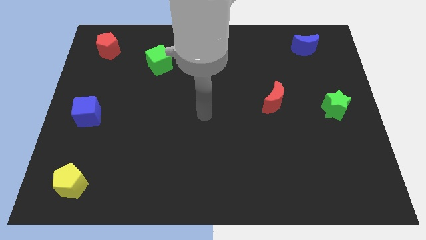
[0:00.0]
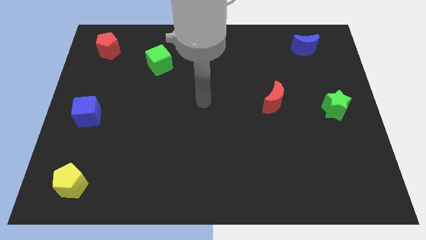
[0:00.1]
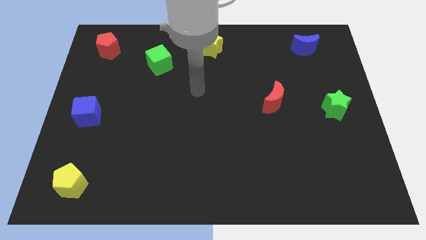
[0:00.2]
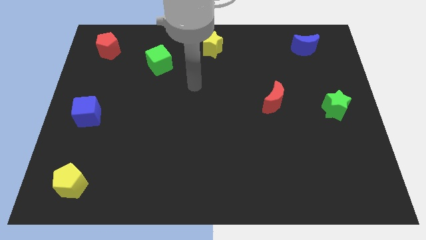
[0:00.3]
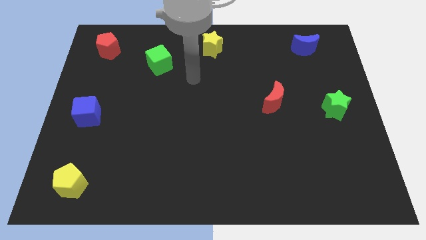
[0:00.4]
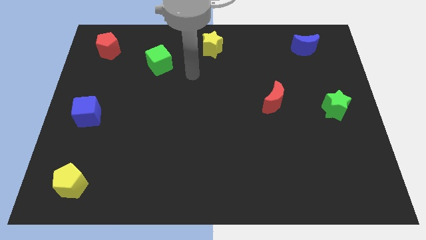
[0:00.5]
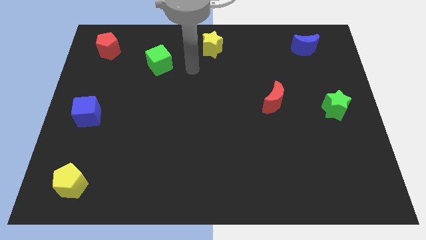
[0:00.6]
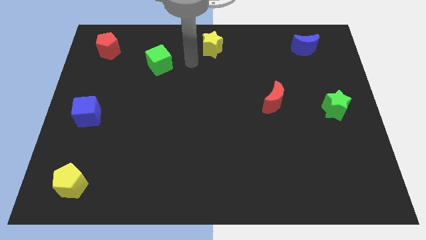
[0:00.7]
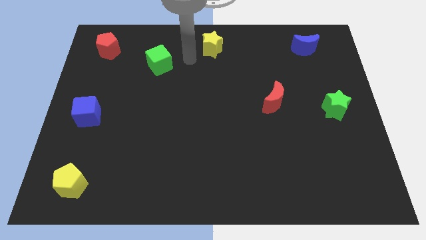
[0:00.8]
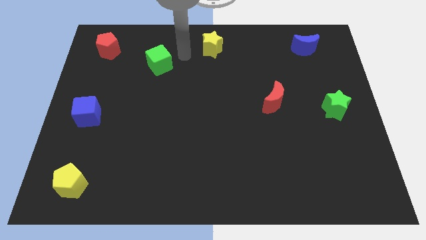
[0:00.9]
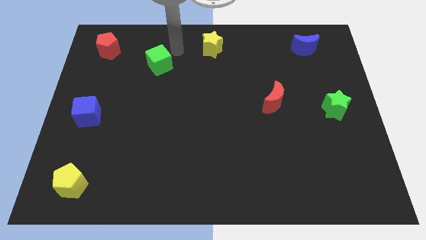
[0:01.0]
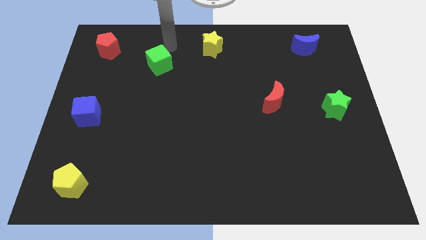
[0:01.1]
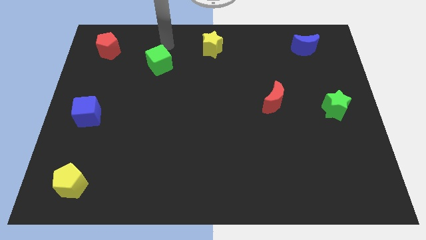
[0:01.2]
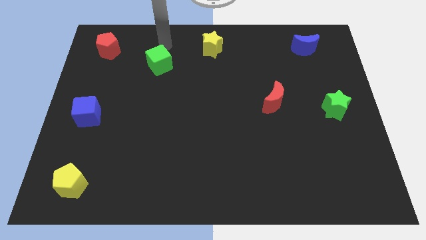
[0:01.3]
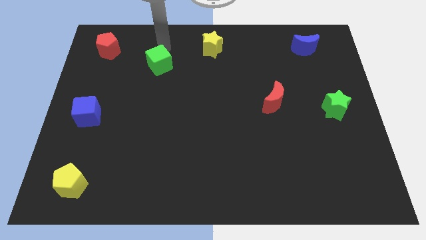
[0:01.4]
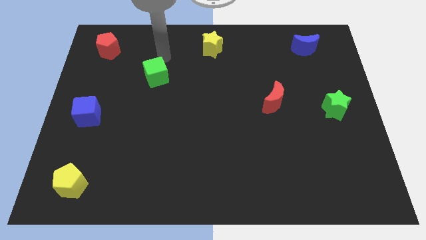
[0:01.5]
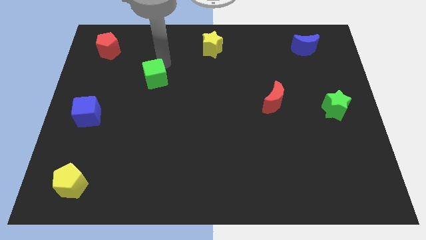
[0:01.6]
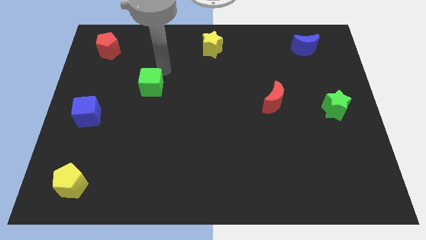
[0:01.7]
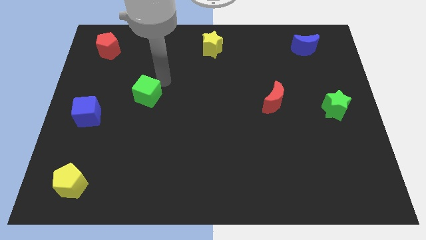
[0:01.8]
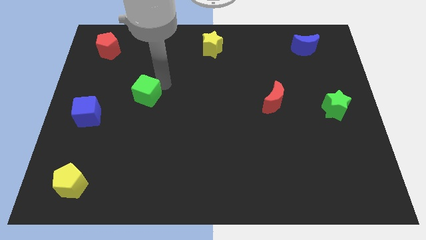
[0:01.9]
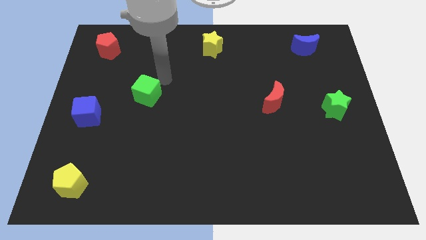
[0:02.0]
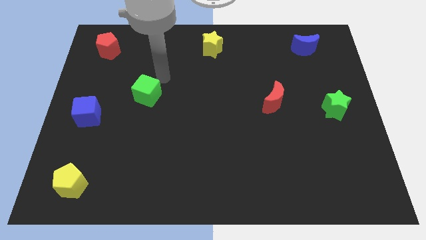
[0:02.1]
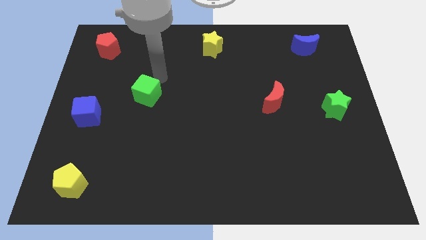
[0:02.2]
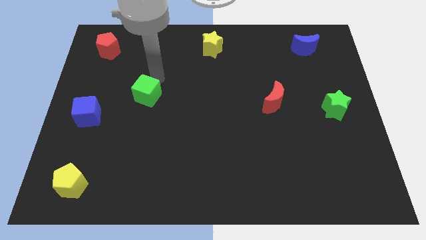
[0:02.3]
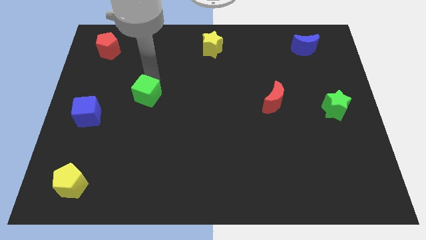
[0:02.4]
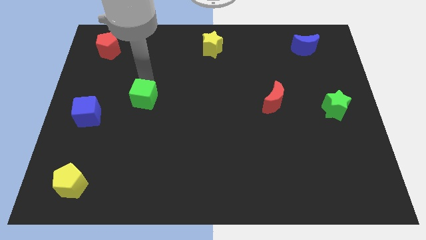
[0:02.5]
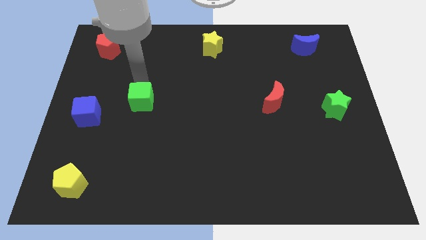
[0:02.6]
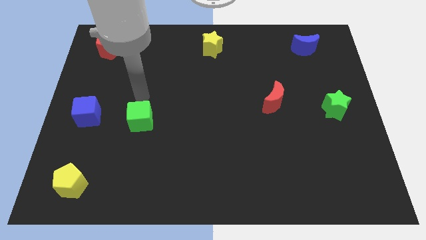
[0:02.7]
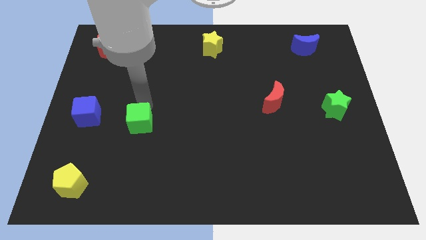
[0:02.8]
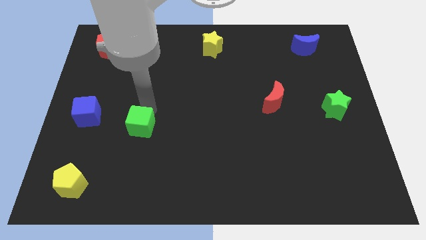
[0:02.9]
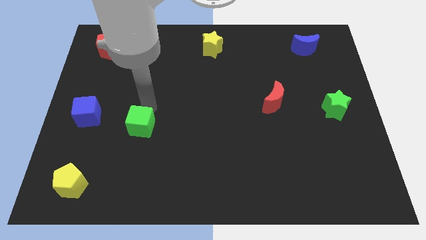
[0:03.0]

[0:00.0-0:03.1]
slide green cube to the right of blue cube

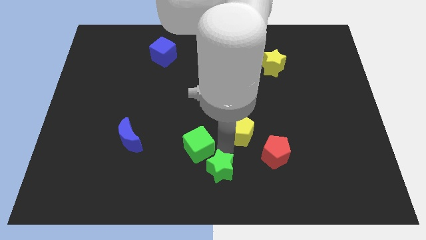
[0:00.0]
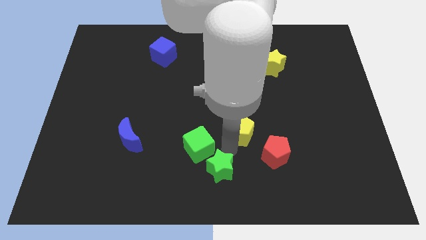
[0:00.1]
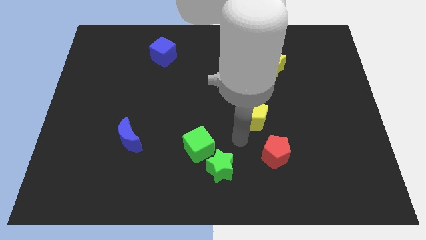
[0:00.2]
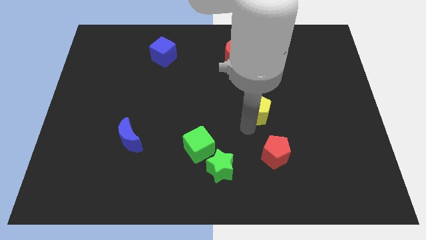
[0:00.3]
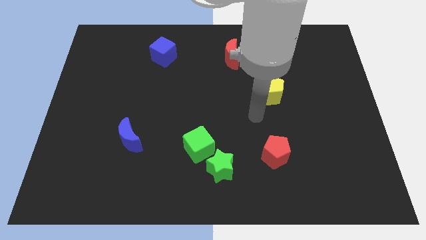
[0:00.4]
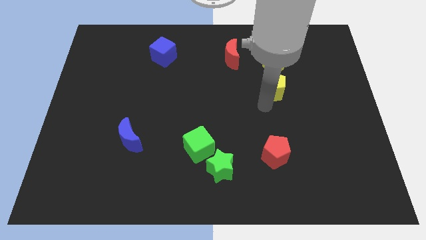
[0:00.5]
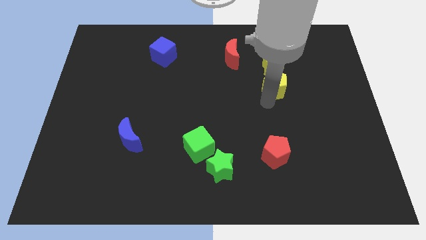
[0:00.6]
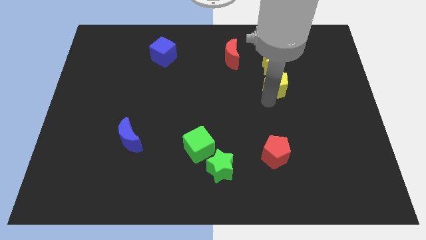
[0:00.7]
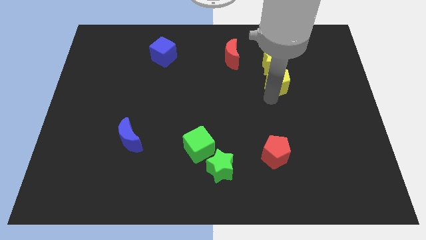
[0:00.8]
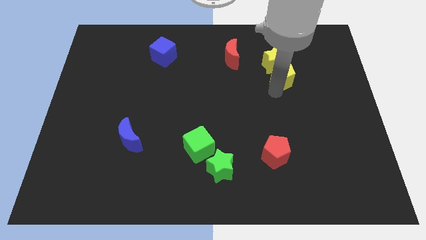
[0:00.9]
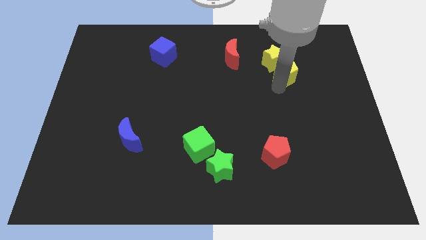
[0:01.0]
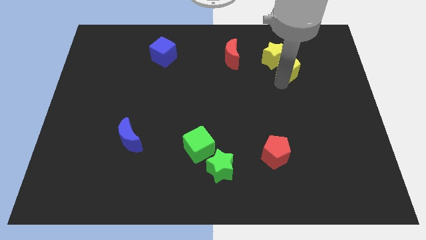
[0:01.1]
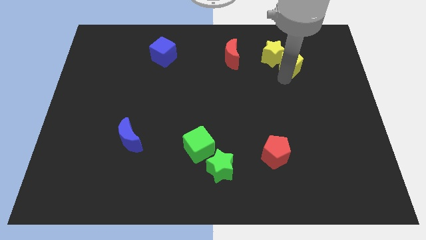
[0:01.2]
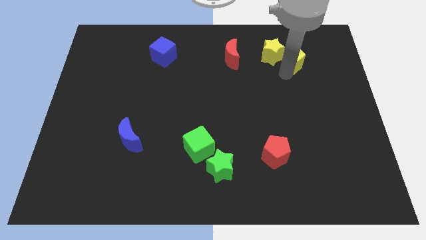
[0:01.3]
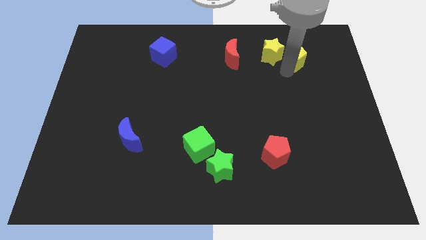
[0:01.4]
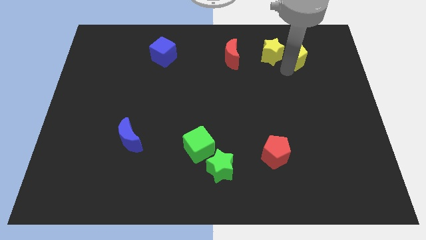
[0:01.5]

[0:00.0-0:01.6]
push the yellow pentagon into yellow star

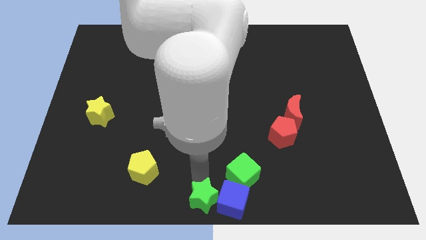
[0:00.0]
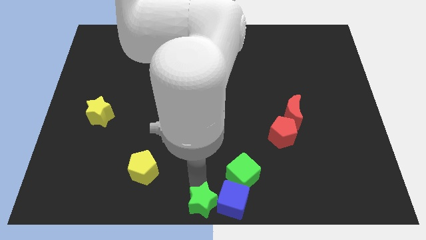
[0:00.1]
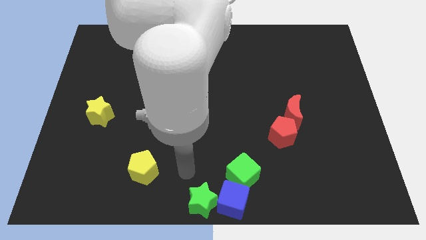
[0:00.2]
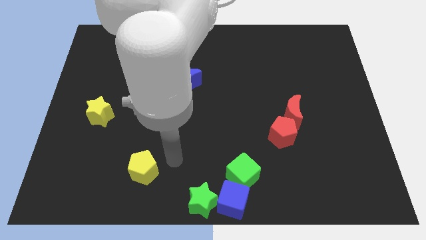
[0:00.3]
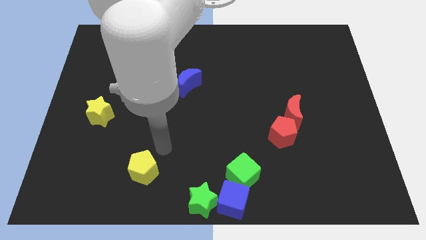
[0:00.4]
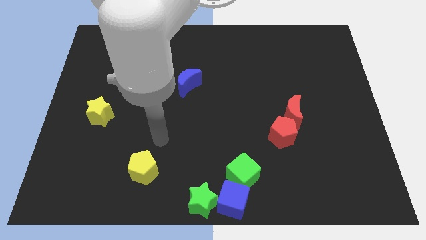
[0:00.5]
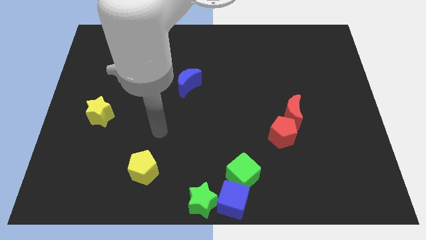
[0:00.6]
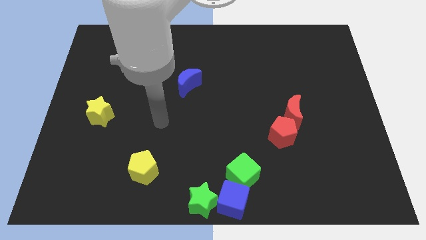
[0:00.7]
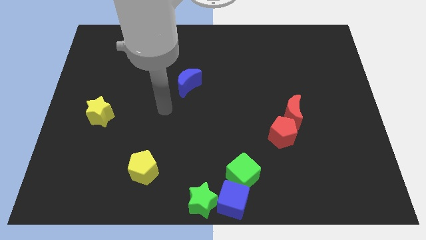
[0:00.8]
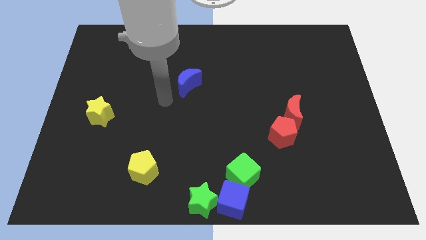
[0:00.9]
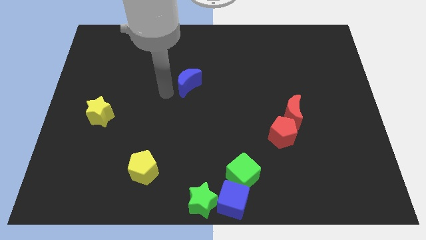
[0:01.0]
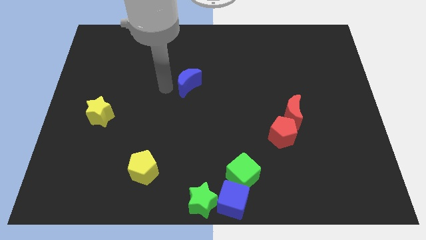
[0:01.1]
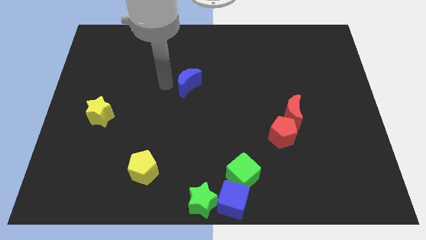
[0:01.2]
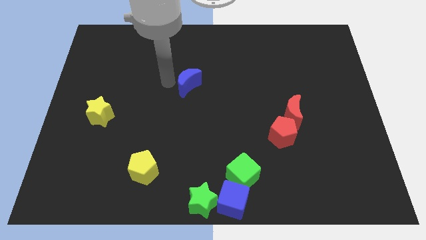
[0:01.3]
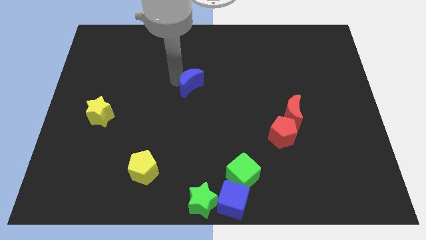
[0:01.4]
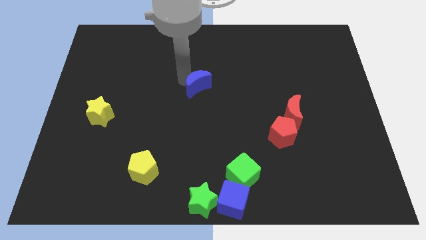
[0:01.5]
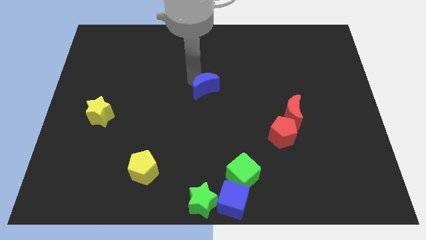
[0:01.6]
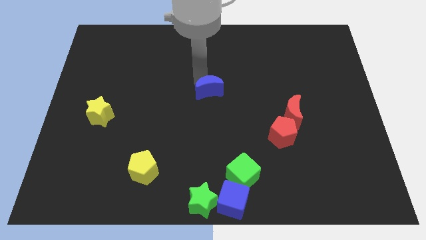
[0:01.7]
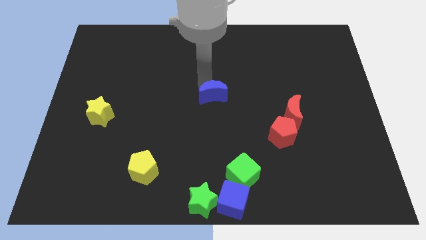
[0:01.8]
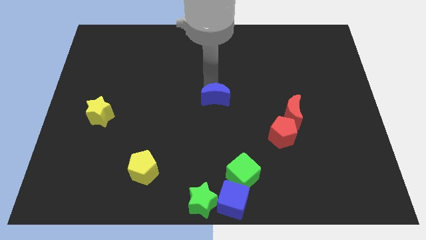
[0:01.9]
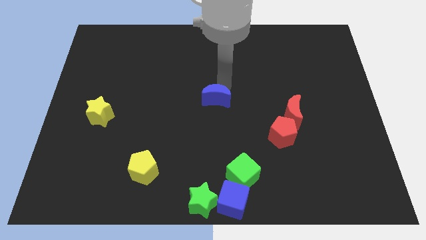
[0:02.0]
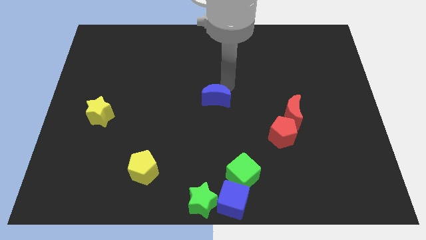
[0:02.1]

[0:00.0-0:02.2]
move your arm to the top of blue moon

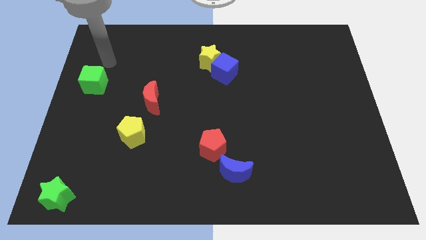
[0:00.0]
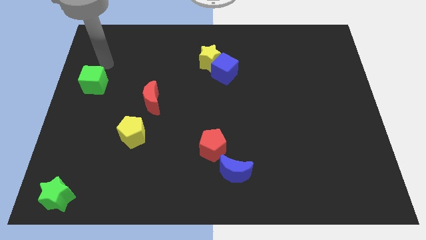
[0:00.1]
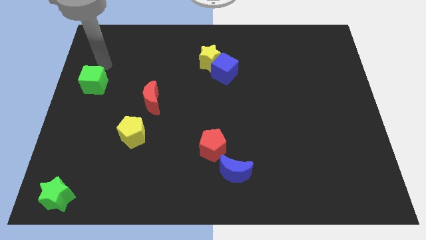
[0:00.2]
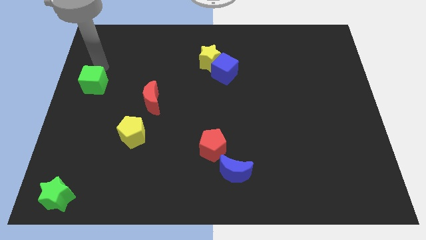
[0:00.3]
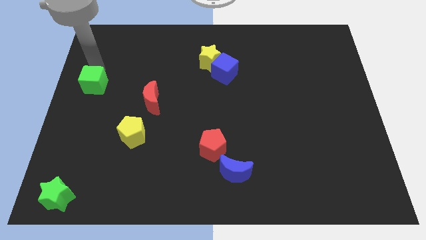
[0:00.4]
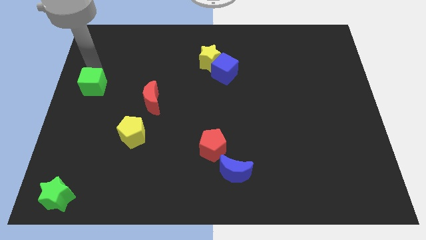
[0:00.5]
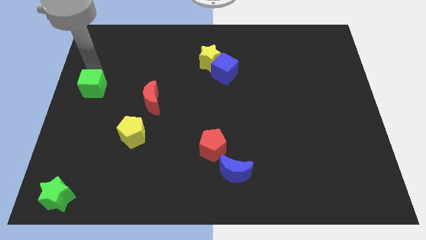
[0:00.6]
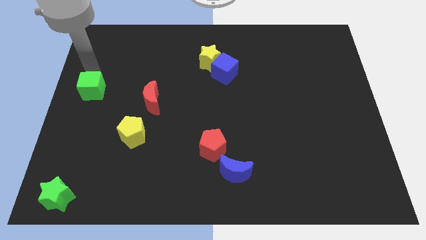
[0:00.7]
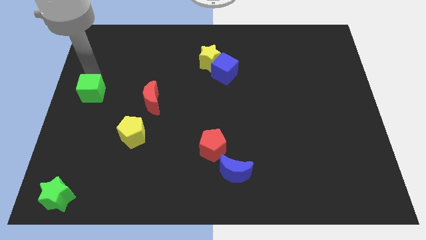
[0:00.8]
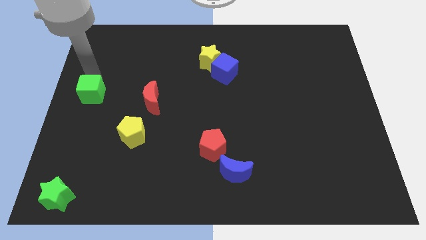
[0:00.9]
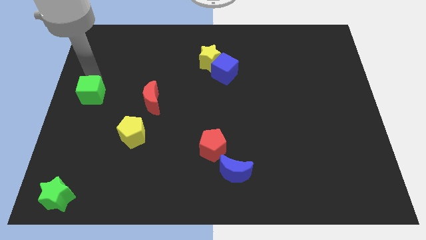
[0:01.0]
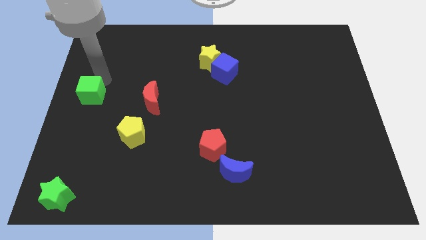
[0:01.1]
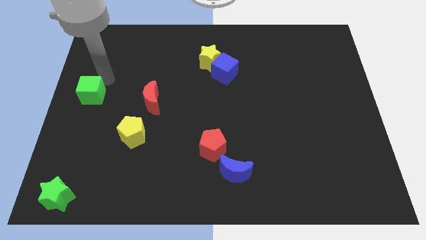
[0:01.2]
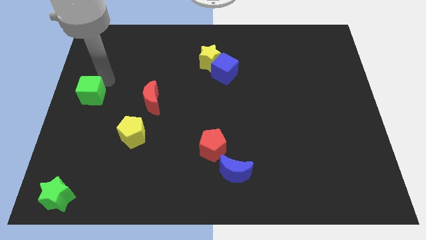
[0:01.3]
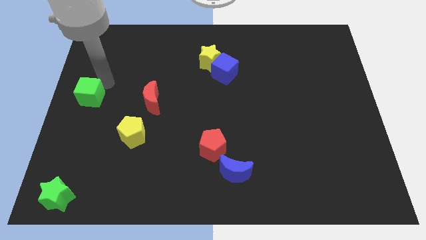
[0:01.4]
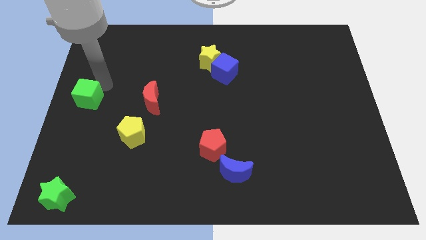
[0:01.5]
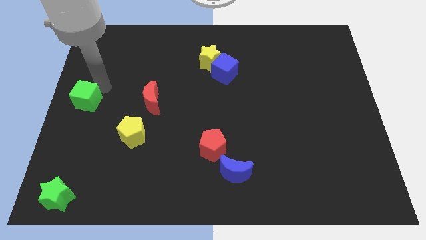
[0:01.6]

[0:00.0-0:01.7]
place the green cube horizontally to the left side of the red crescent

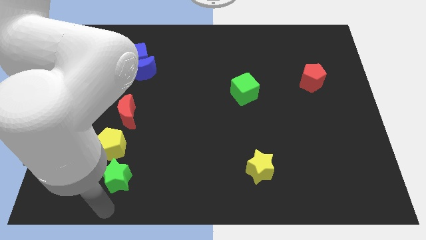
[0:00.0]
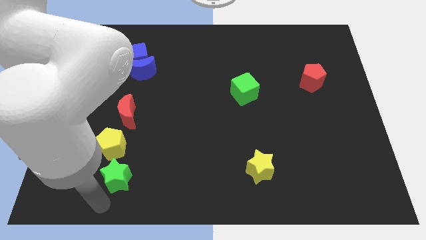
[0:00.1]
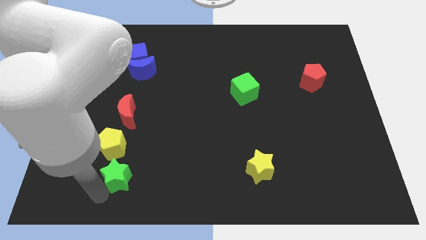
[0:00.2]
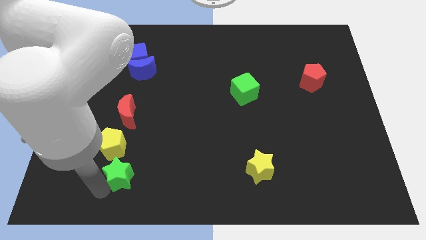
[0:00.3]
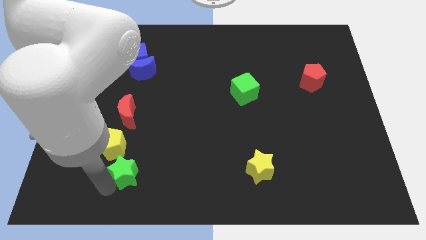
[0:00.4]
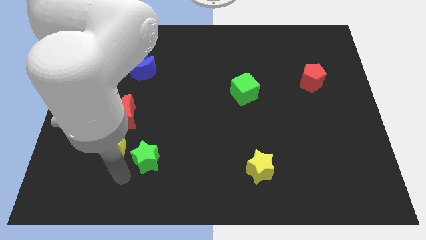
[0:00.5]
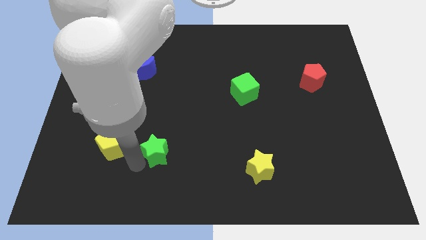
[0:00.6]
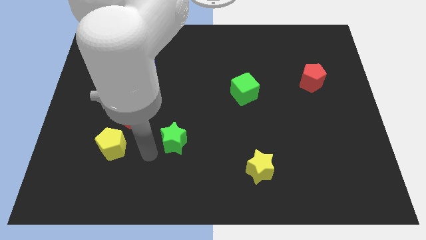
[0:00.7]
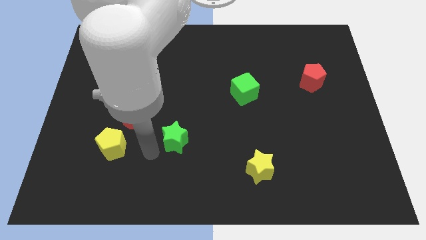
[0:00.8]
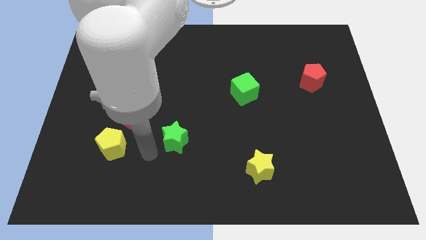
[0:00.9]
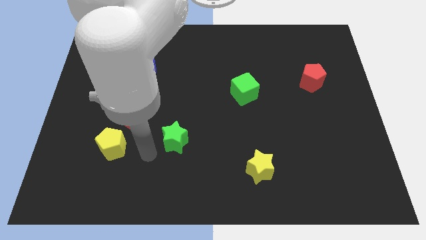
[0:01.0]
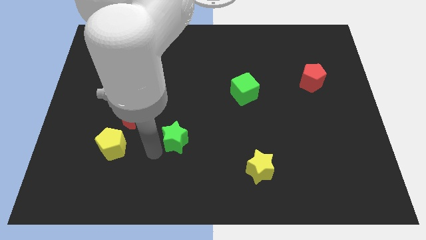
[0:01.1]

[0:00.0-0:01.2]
drag the green star parallel to the right of the yellow pentagon
